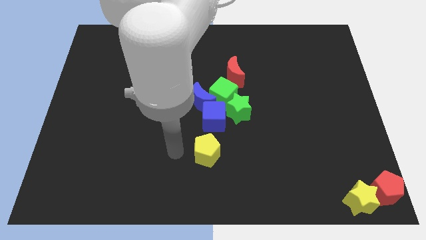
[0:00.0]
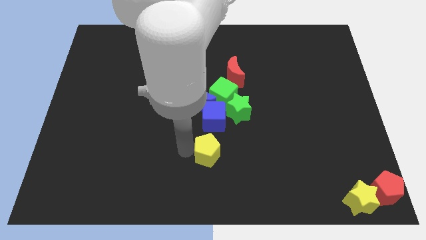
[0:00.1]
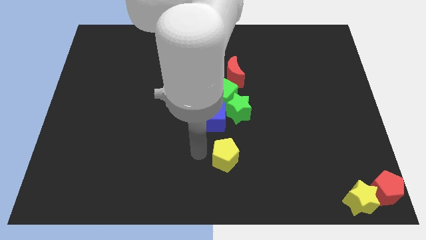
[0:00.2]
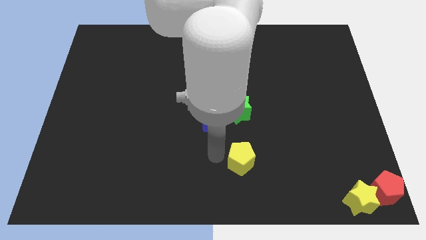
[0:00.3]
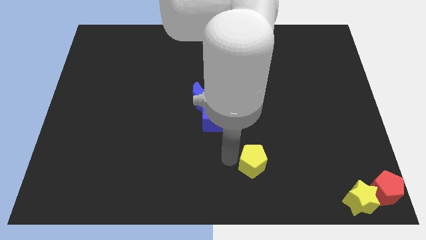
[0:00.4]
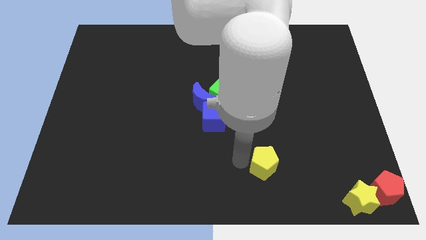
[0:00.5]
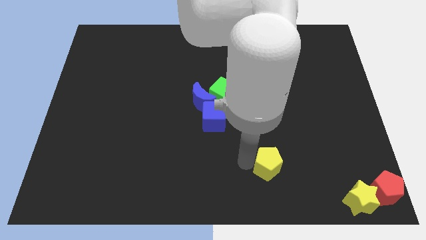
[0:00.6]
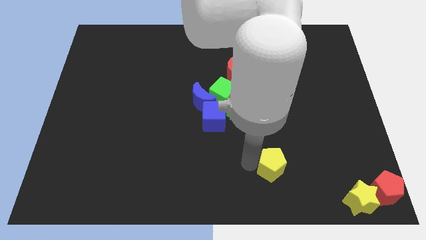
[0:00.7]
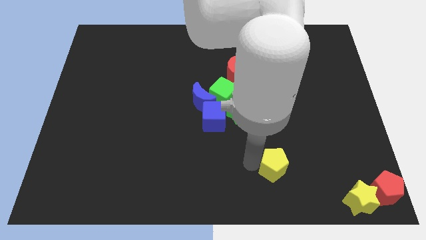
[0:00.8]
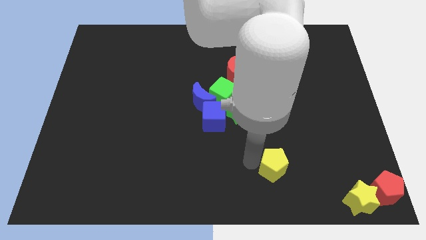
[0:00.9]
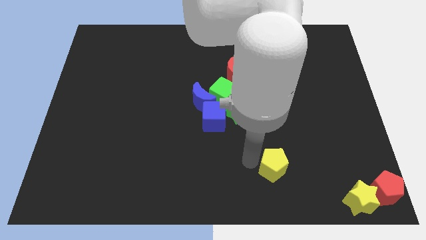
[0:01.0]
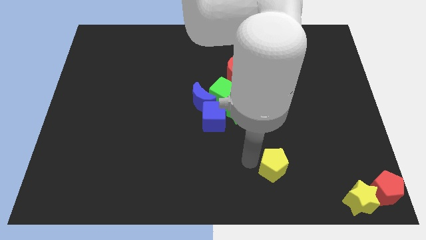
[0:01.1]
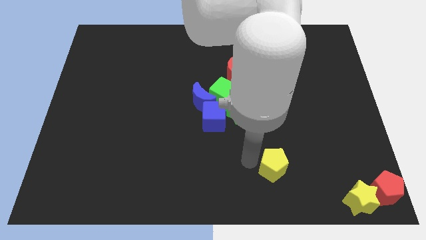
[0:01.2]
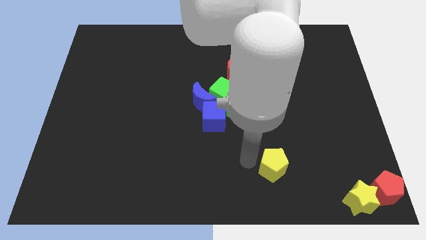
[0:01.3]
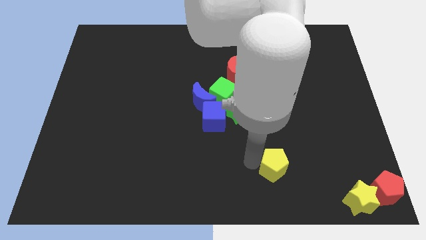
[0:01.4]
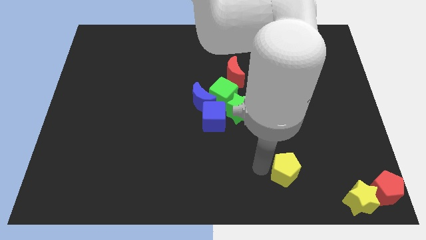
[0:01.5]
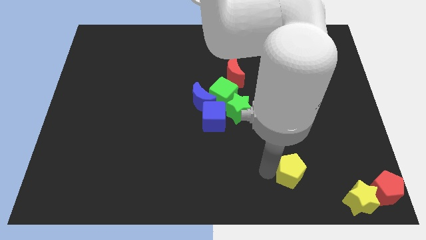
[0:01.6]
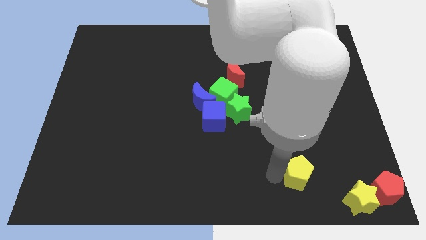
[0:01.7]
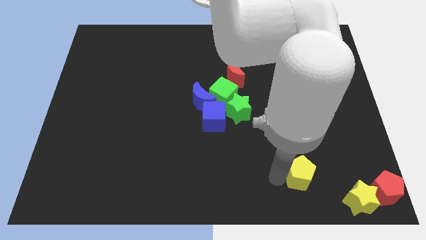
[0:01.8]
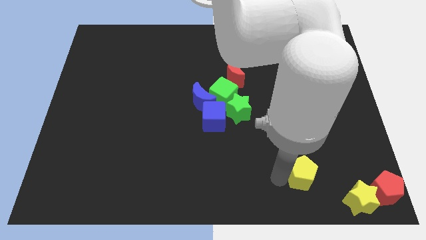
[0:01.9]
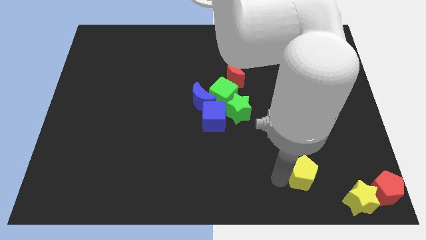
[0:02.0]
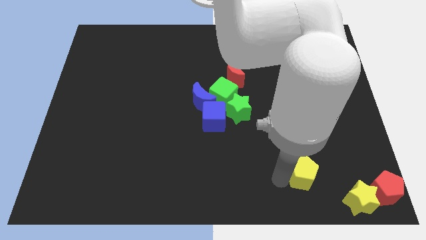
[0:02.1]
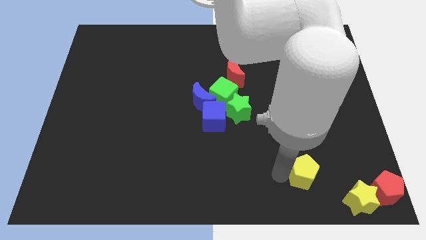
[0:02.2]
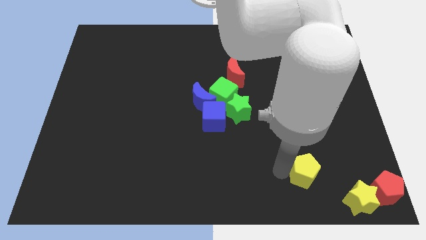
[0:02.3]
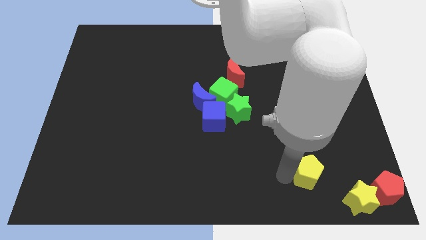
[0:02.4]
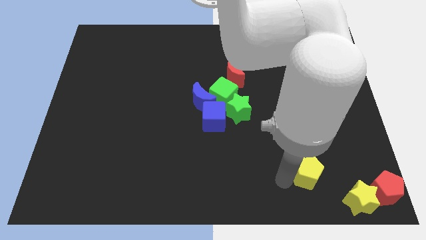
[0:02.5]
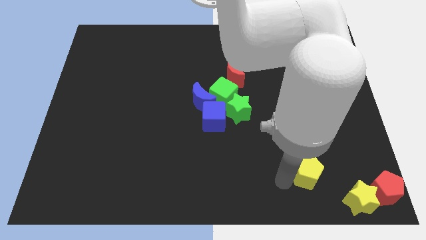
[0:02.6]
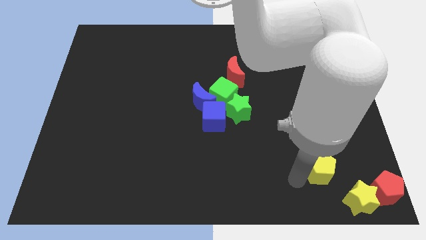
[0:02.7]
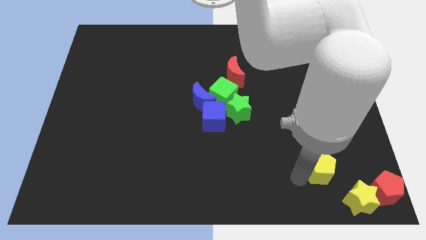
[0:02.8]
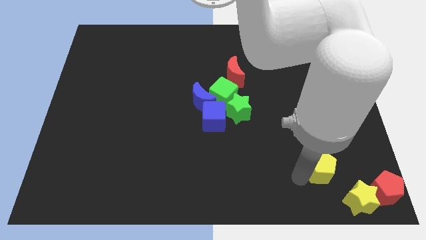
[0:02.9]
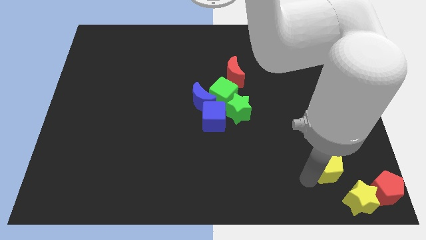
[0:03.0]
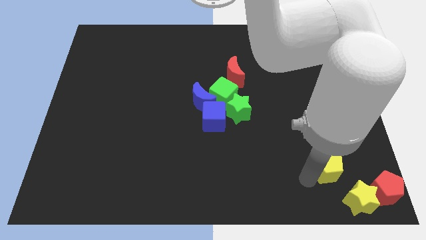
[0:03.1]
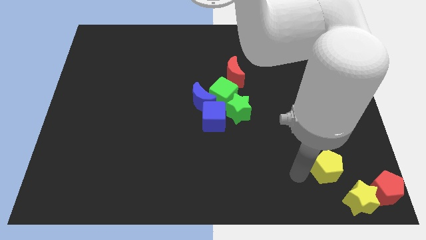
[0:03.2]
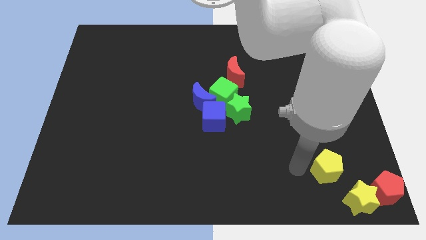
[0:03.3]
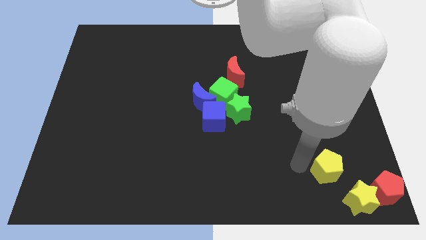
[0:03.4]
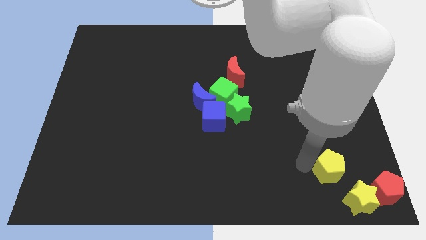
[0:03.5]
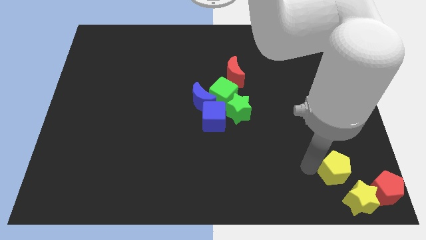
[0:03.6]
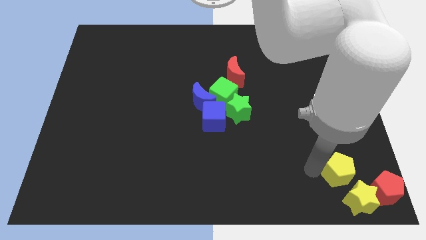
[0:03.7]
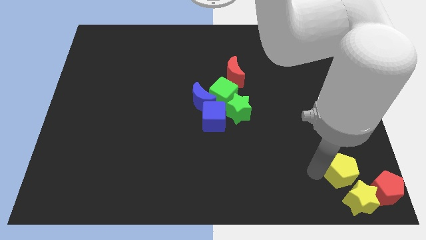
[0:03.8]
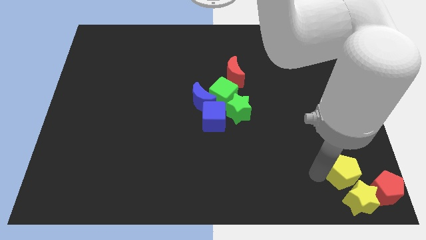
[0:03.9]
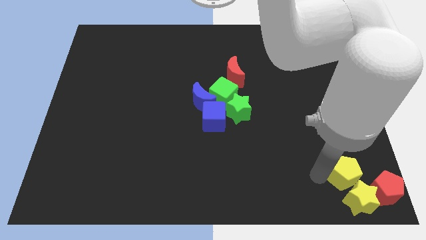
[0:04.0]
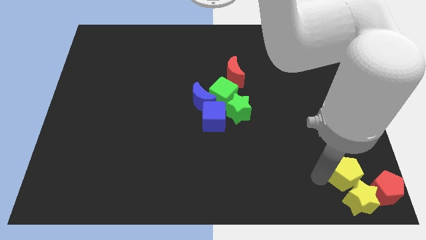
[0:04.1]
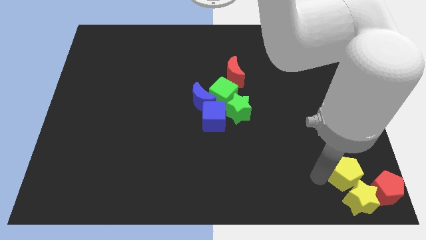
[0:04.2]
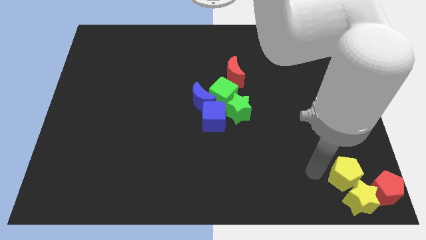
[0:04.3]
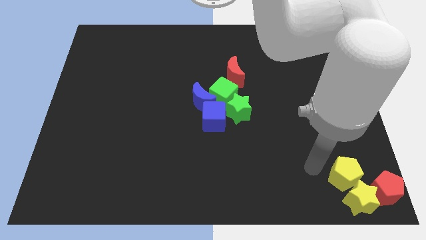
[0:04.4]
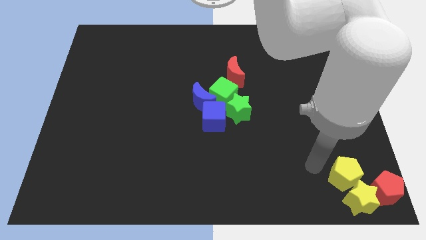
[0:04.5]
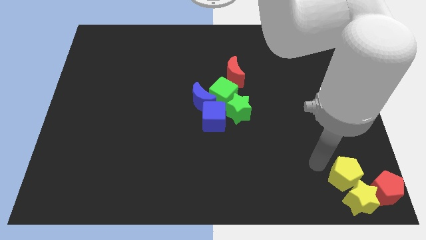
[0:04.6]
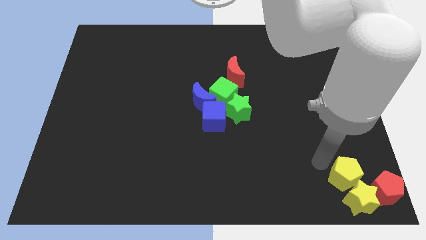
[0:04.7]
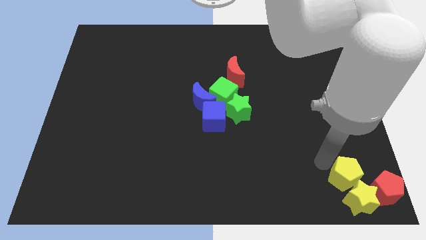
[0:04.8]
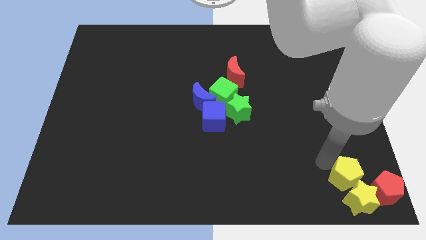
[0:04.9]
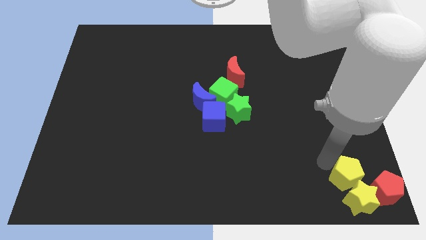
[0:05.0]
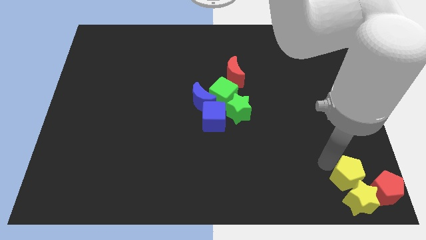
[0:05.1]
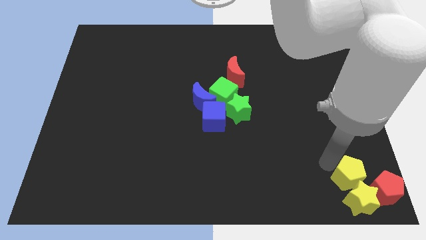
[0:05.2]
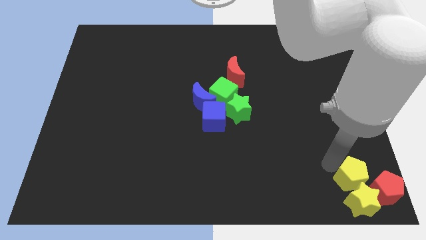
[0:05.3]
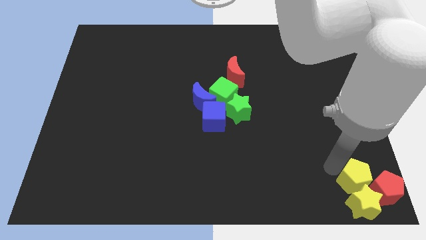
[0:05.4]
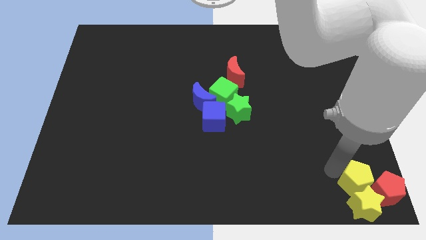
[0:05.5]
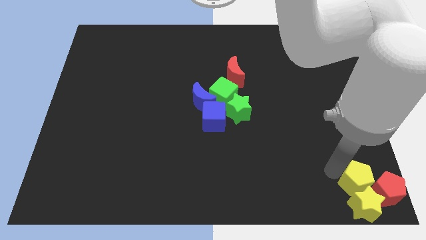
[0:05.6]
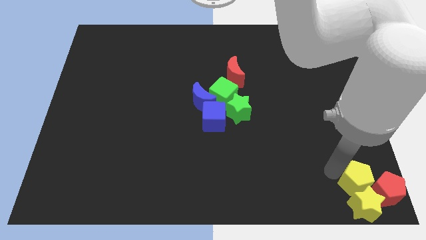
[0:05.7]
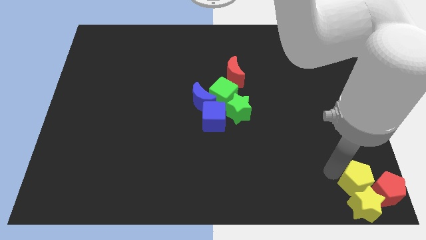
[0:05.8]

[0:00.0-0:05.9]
push the yellow pentagon into the yellow star

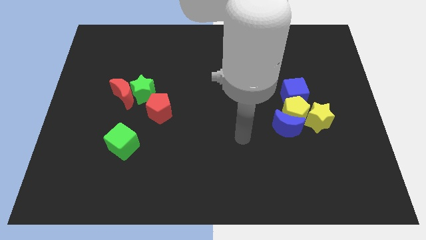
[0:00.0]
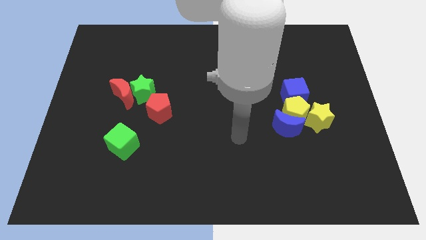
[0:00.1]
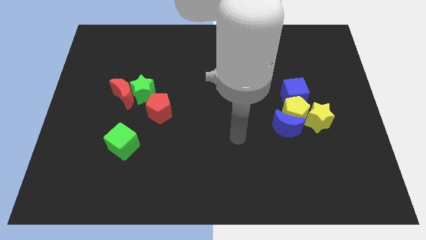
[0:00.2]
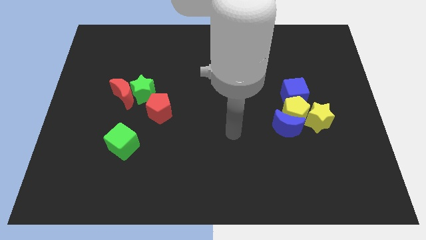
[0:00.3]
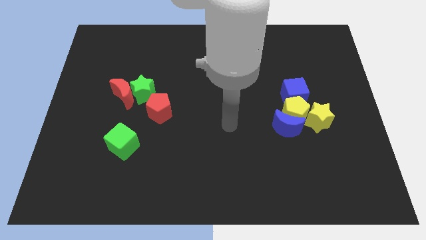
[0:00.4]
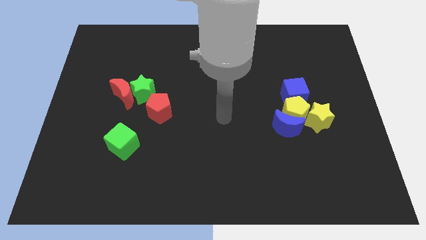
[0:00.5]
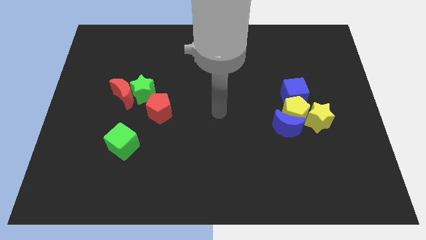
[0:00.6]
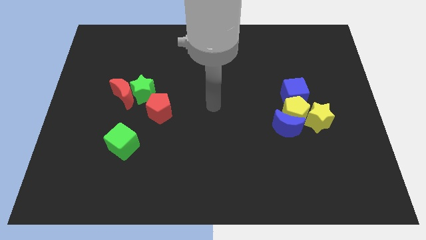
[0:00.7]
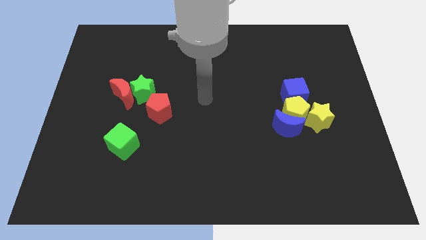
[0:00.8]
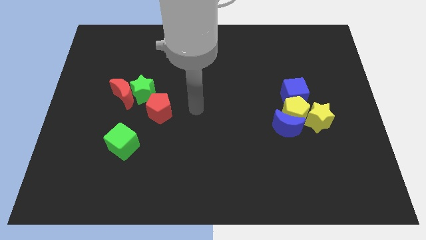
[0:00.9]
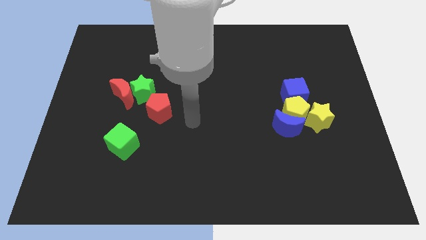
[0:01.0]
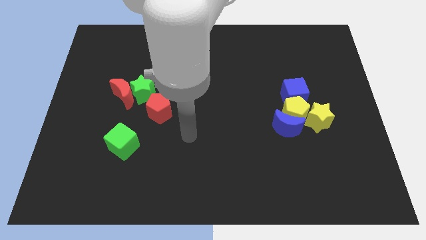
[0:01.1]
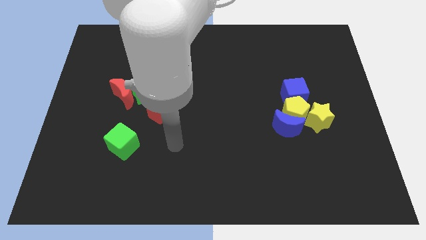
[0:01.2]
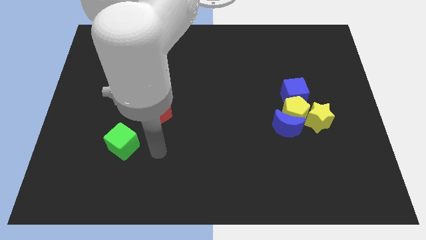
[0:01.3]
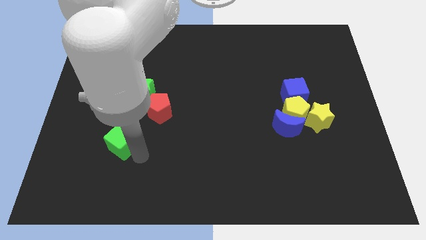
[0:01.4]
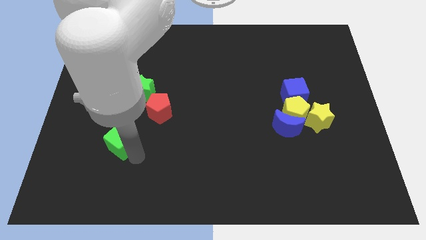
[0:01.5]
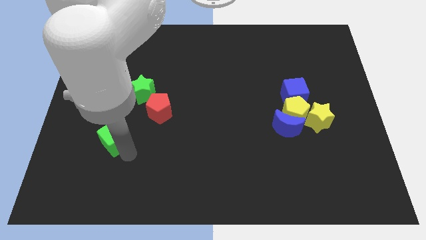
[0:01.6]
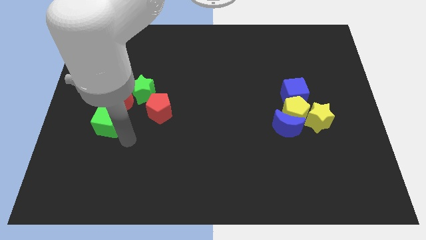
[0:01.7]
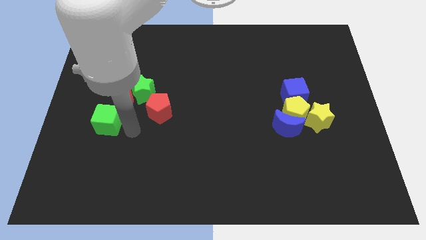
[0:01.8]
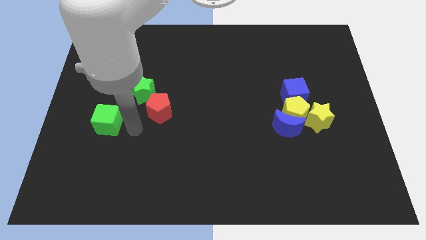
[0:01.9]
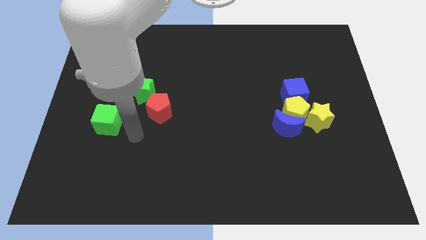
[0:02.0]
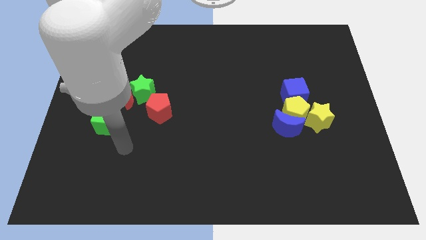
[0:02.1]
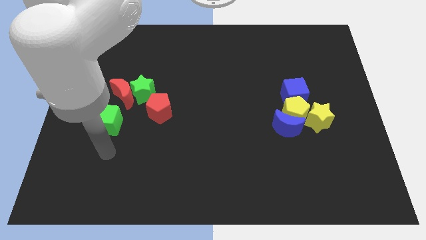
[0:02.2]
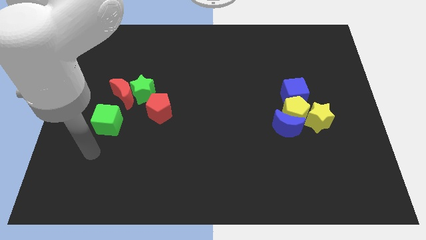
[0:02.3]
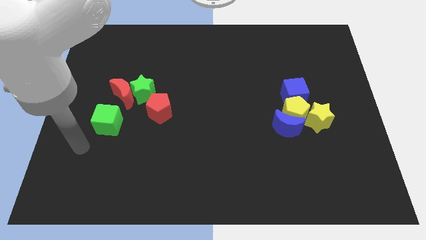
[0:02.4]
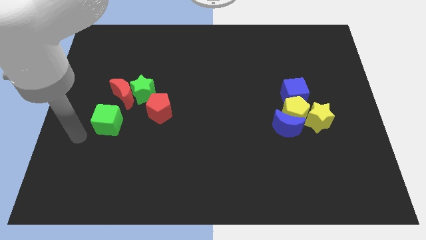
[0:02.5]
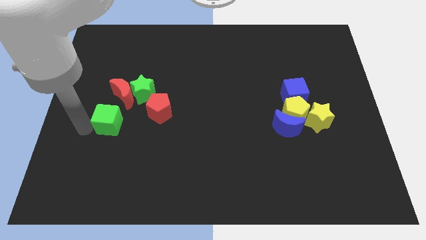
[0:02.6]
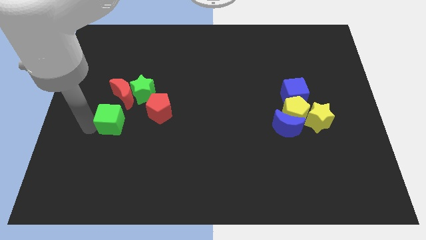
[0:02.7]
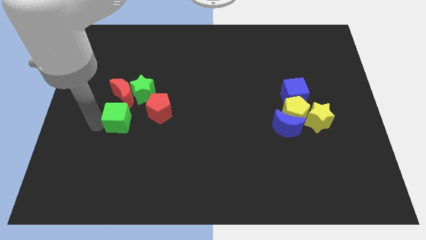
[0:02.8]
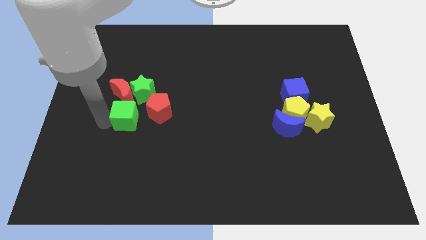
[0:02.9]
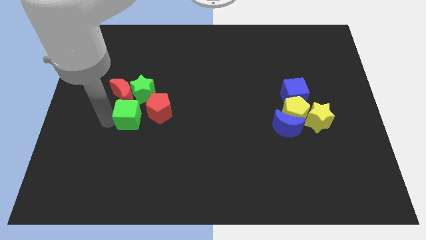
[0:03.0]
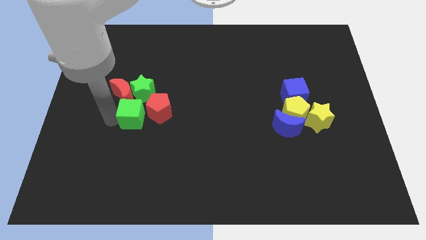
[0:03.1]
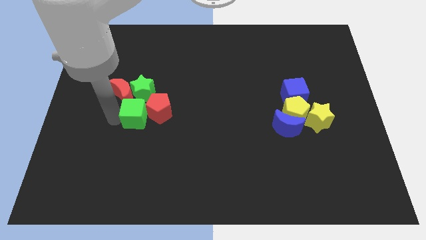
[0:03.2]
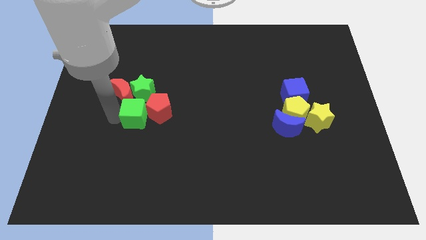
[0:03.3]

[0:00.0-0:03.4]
place the green cube to the left of the red pentagon
